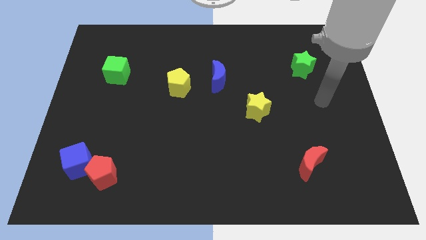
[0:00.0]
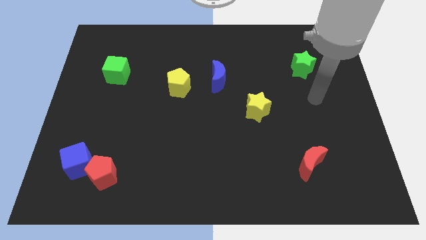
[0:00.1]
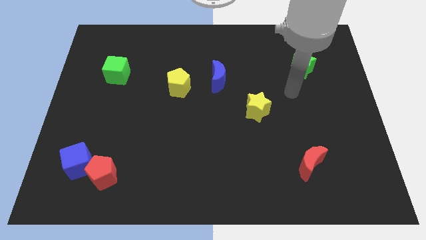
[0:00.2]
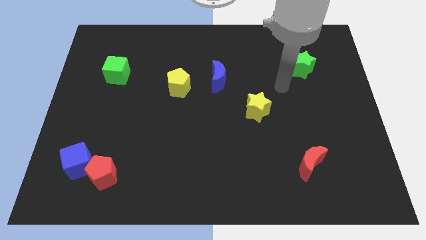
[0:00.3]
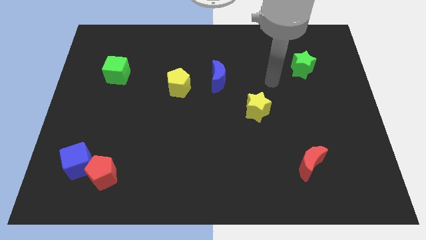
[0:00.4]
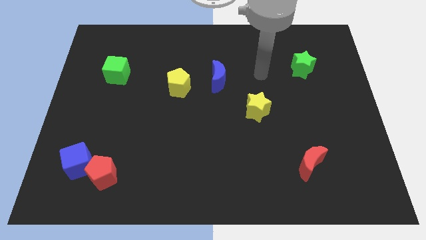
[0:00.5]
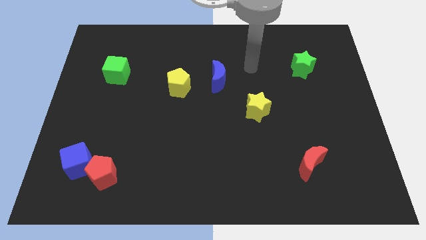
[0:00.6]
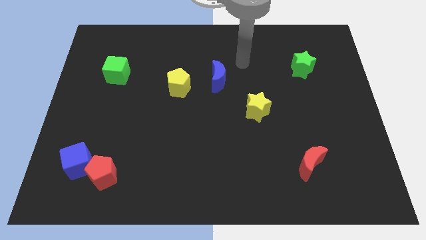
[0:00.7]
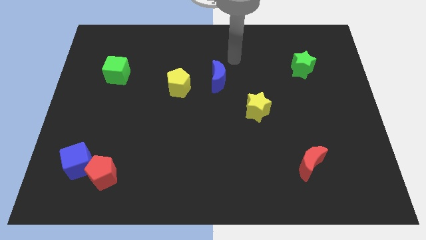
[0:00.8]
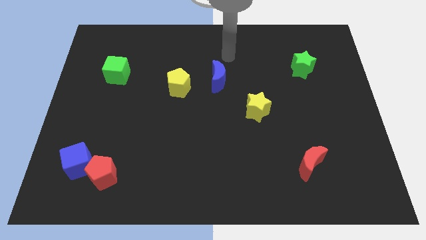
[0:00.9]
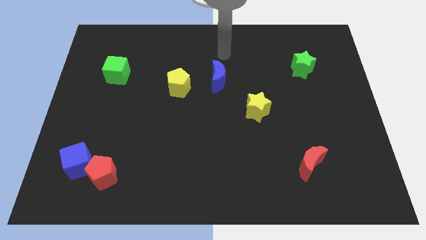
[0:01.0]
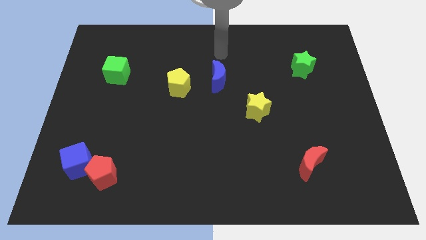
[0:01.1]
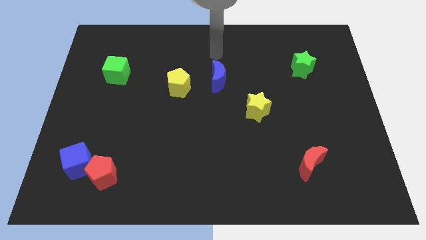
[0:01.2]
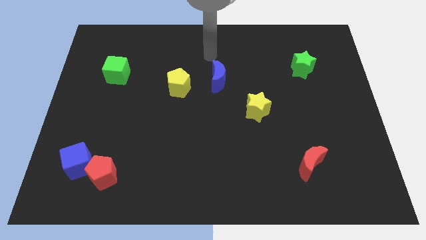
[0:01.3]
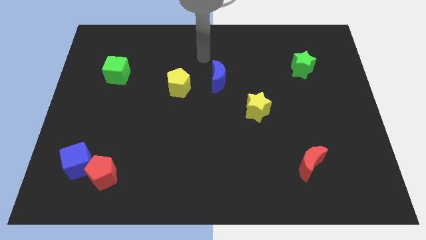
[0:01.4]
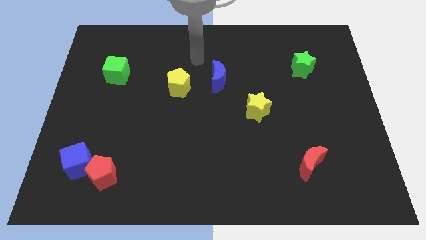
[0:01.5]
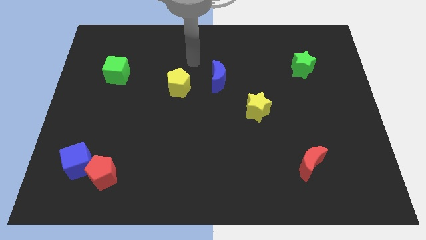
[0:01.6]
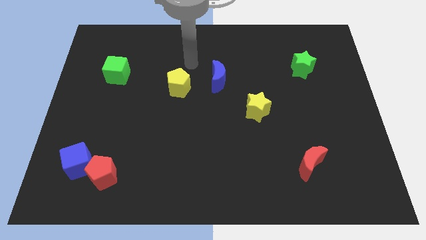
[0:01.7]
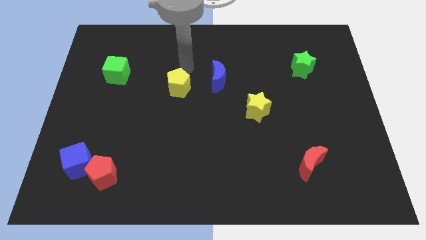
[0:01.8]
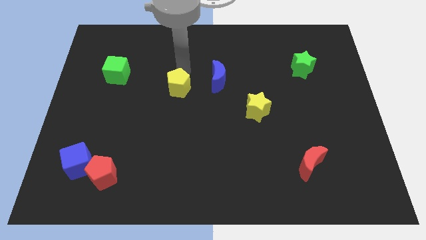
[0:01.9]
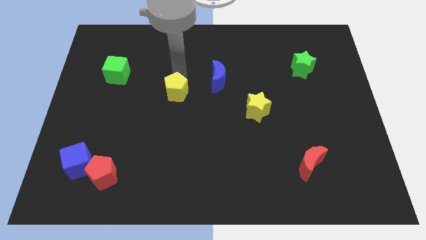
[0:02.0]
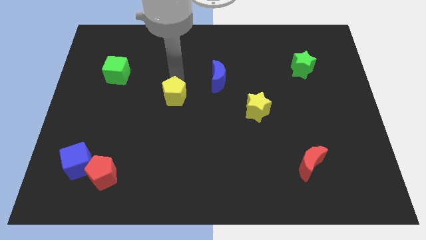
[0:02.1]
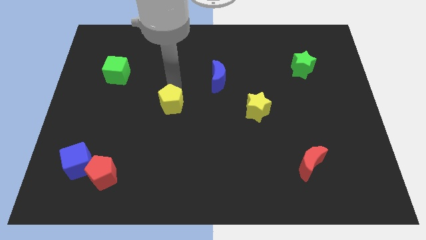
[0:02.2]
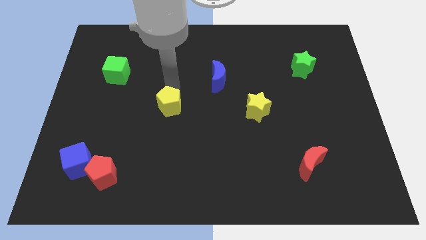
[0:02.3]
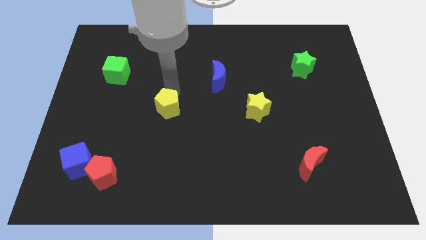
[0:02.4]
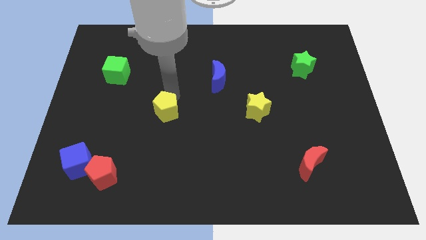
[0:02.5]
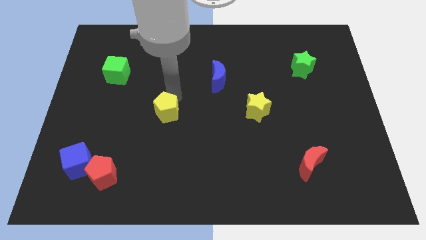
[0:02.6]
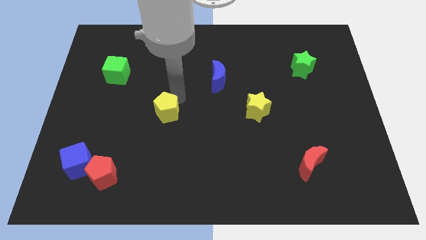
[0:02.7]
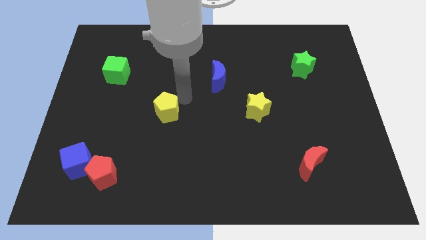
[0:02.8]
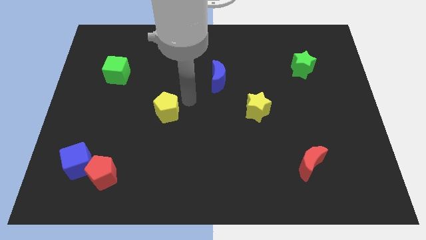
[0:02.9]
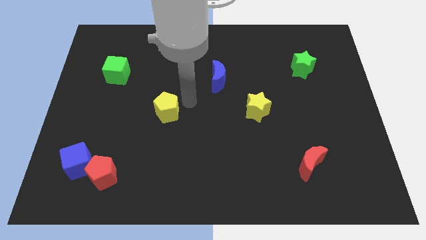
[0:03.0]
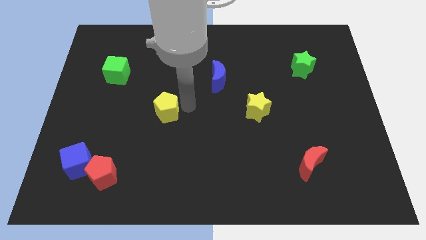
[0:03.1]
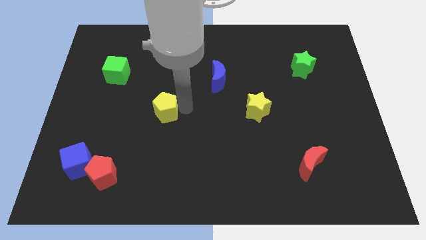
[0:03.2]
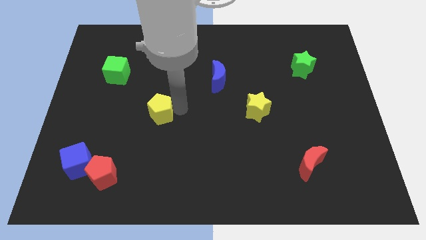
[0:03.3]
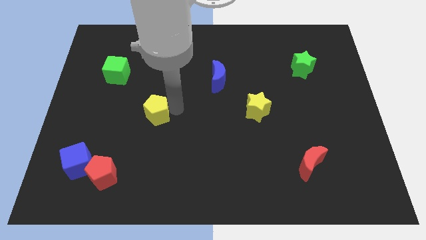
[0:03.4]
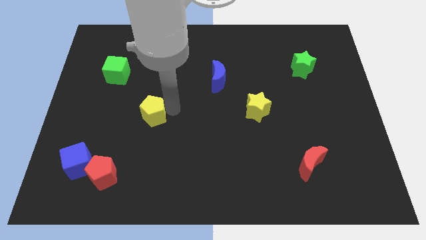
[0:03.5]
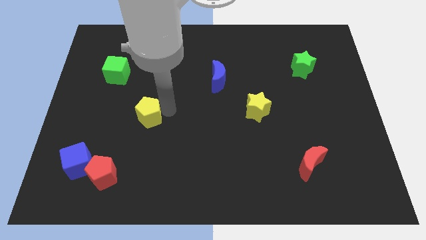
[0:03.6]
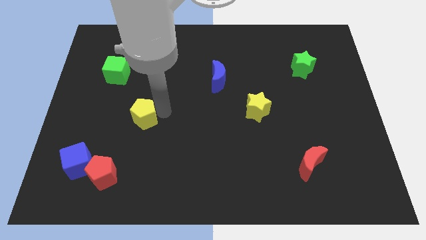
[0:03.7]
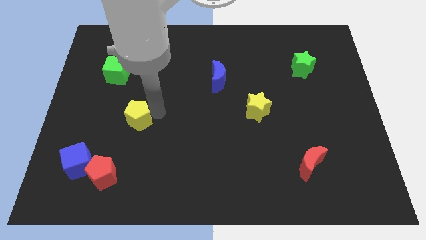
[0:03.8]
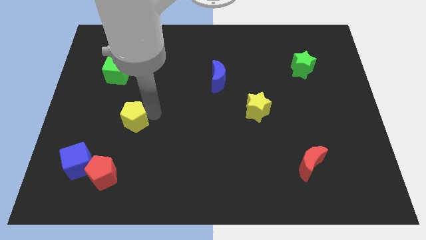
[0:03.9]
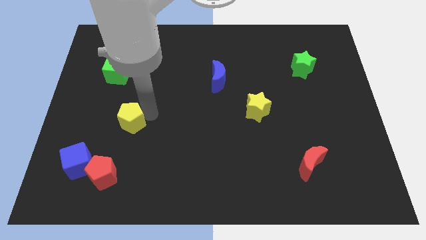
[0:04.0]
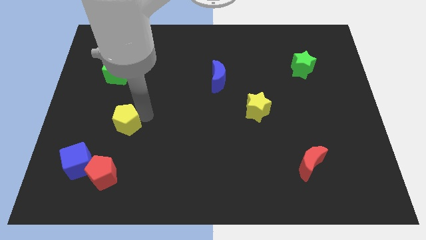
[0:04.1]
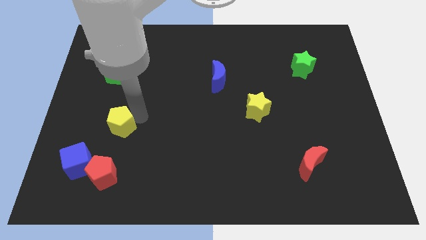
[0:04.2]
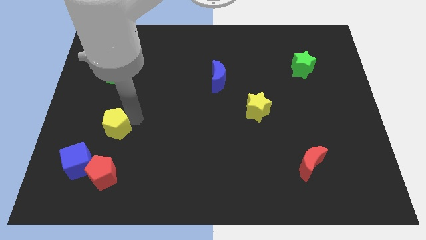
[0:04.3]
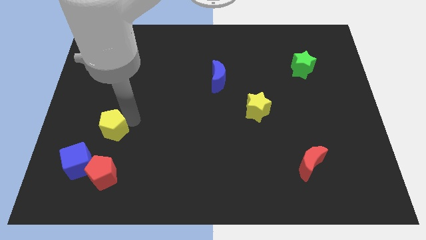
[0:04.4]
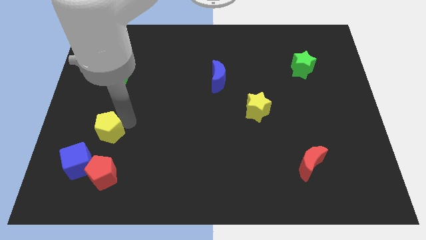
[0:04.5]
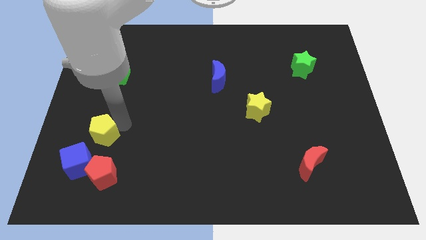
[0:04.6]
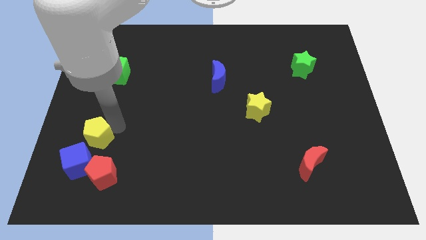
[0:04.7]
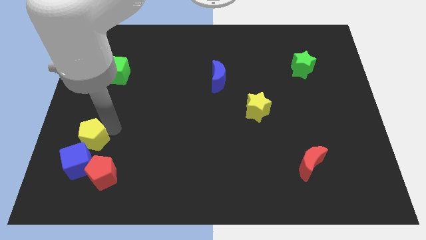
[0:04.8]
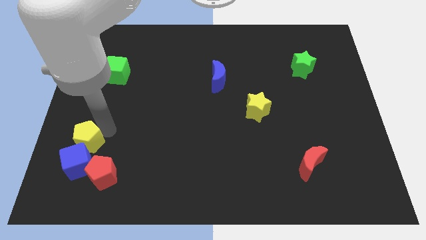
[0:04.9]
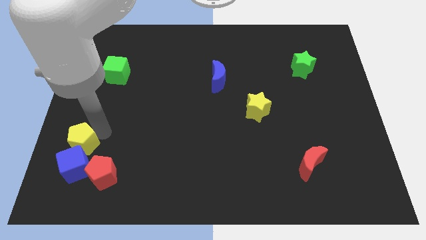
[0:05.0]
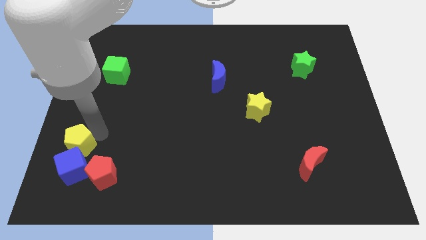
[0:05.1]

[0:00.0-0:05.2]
push the yellow pentagon next to the blue cube

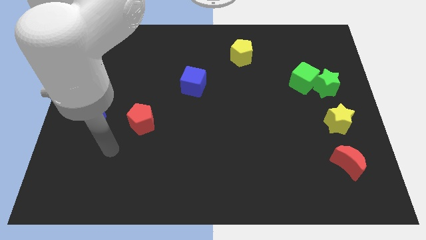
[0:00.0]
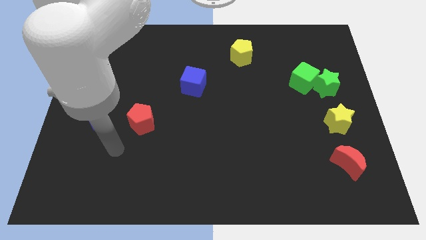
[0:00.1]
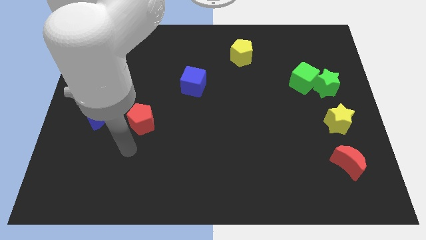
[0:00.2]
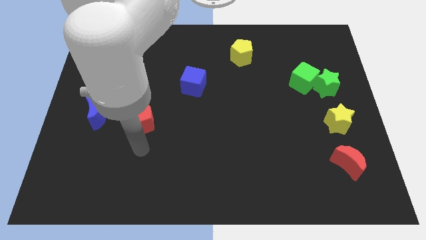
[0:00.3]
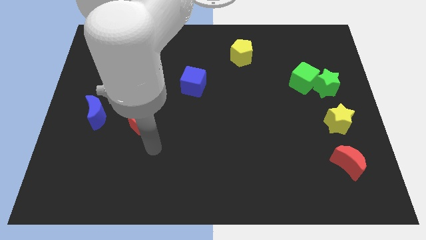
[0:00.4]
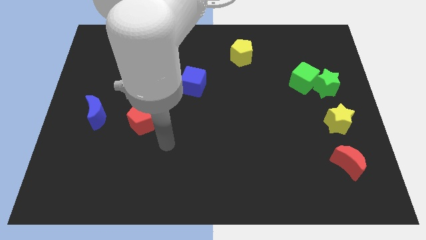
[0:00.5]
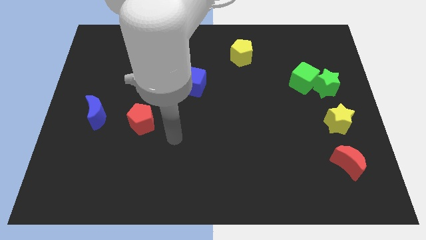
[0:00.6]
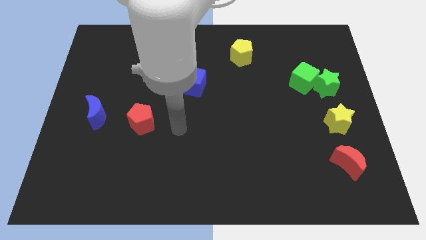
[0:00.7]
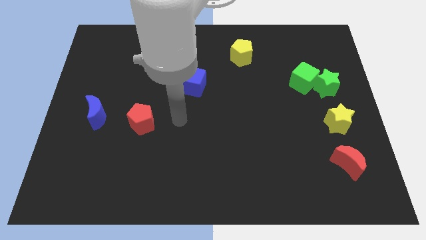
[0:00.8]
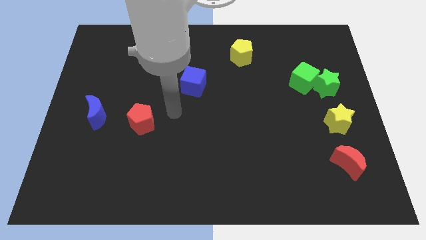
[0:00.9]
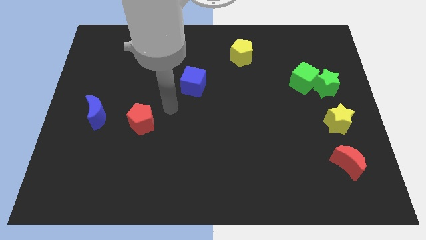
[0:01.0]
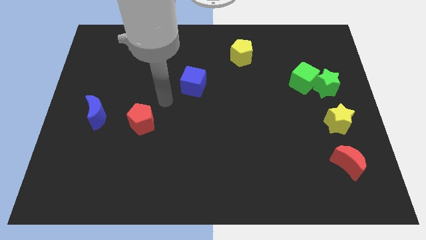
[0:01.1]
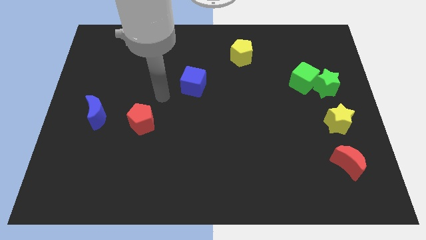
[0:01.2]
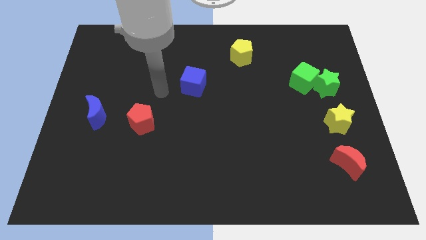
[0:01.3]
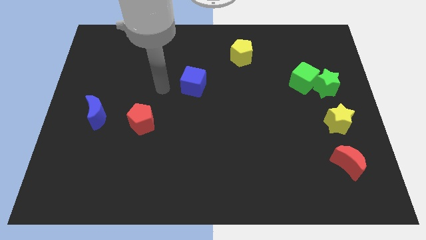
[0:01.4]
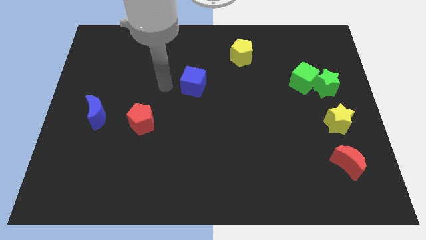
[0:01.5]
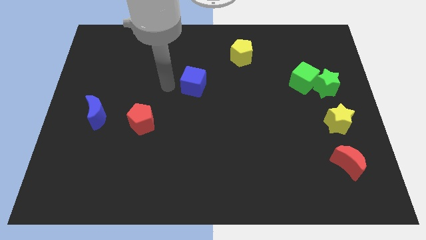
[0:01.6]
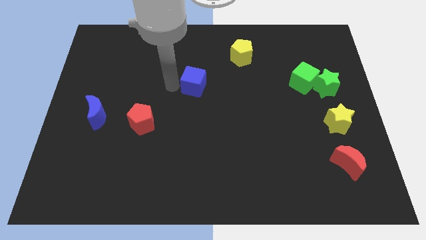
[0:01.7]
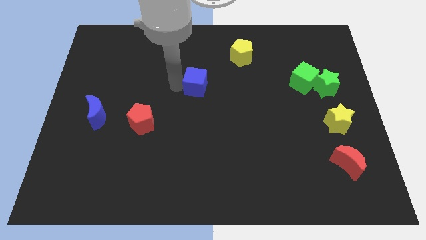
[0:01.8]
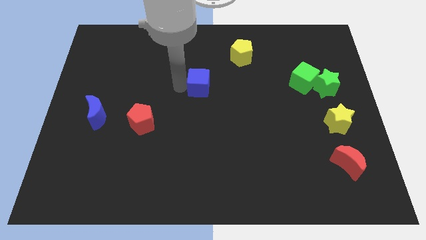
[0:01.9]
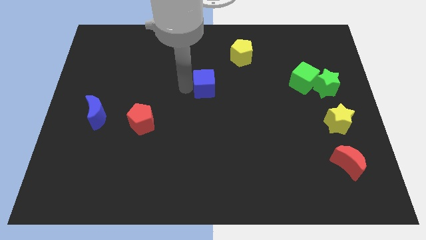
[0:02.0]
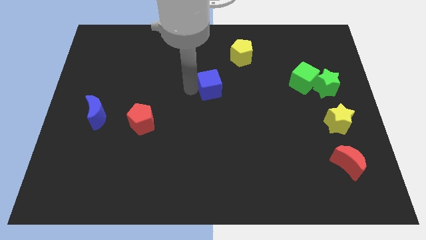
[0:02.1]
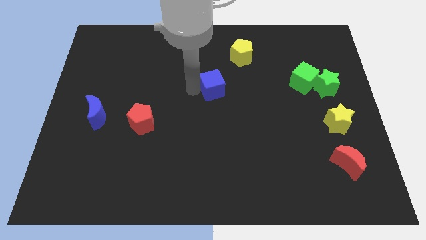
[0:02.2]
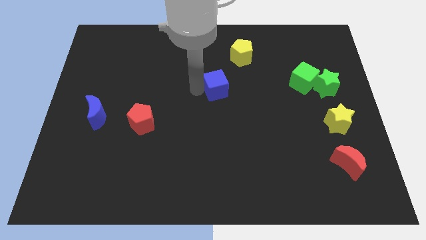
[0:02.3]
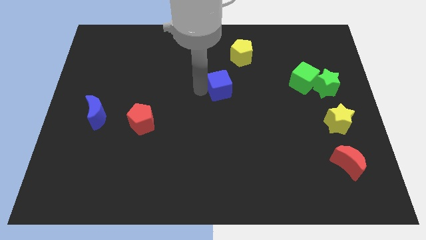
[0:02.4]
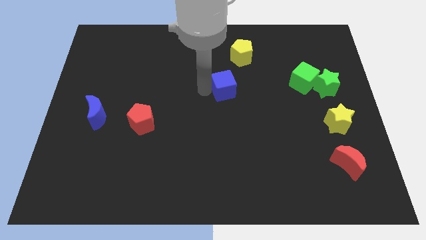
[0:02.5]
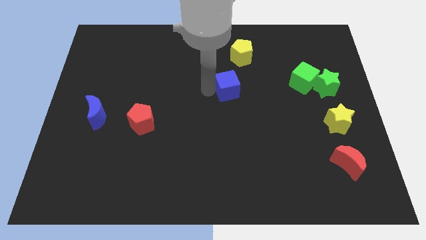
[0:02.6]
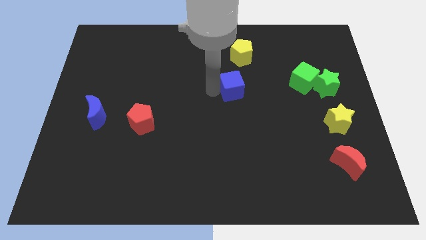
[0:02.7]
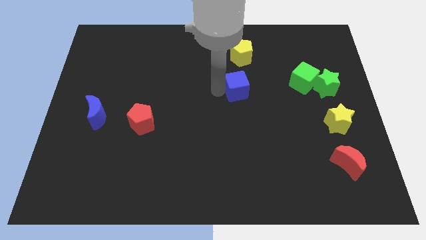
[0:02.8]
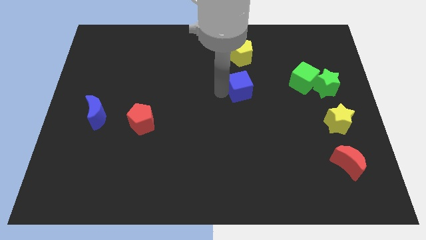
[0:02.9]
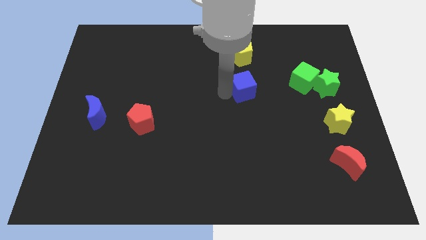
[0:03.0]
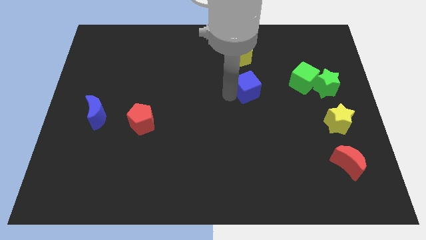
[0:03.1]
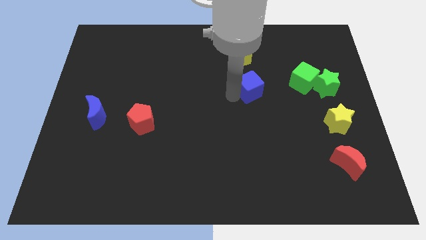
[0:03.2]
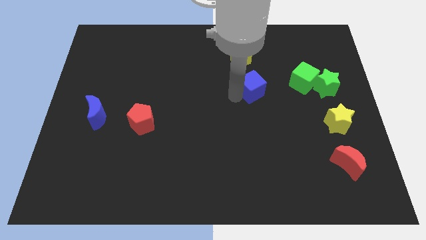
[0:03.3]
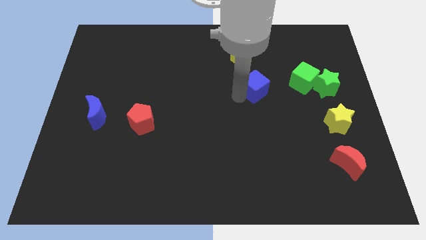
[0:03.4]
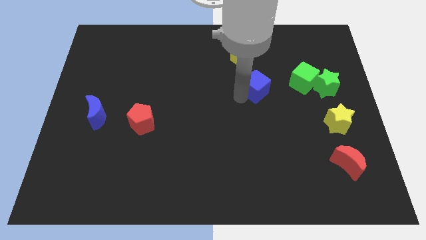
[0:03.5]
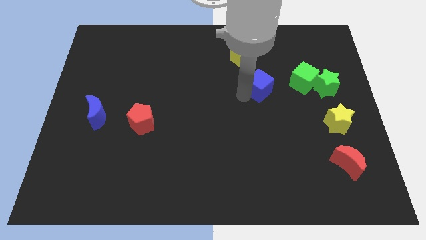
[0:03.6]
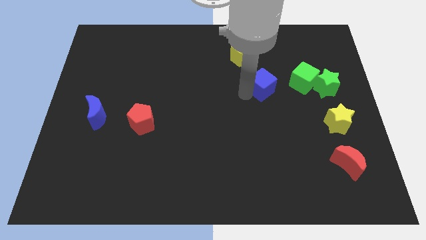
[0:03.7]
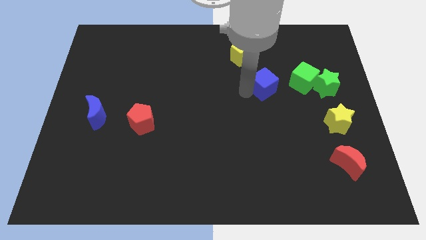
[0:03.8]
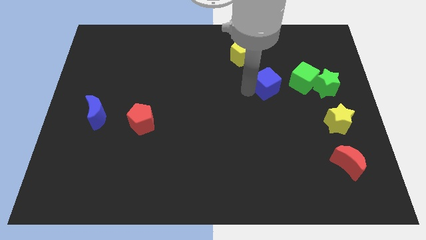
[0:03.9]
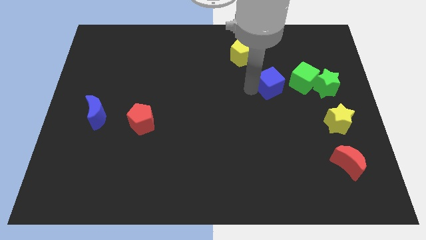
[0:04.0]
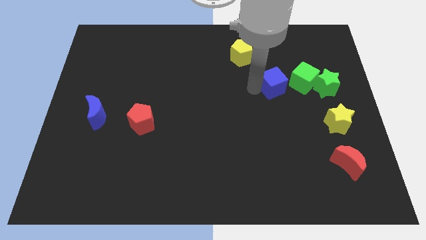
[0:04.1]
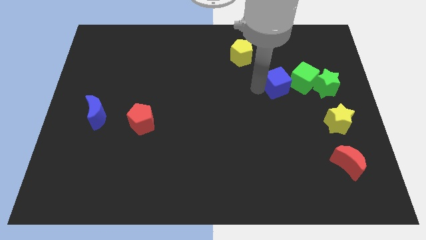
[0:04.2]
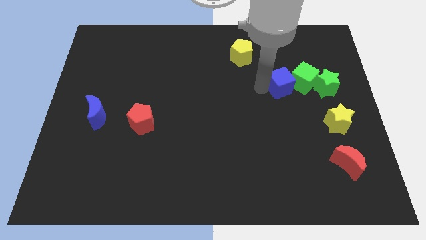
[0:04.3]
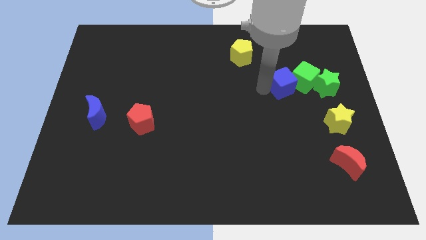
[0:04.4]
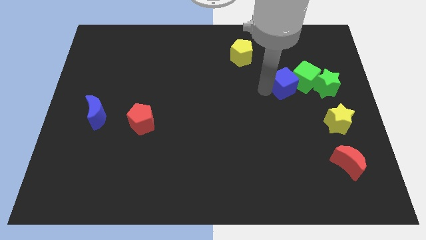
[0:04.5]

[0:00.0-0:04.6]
slide the blue cube towards the green cube
